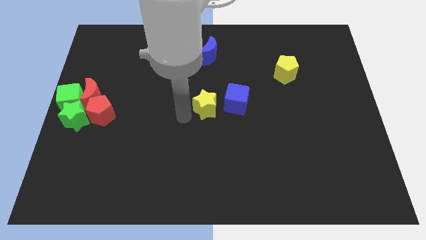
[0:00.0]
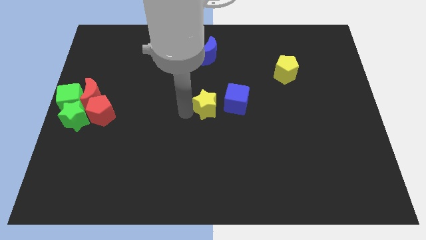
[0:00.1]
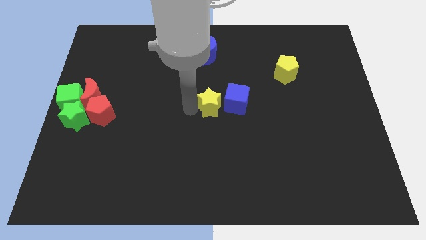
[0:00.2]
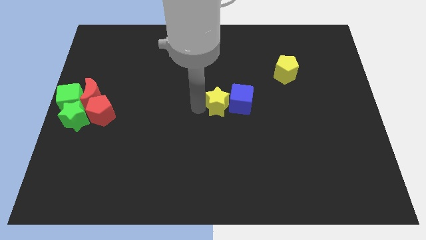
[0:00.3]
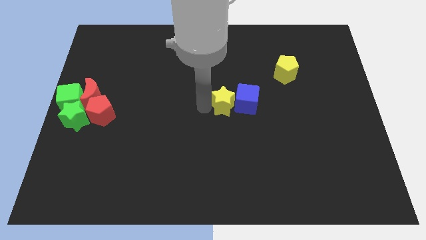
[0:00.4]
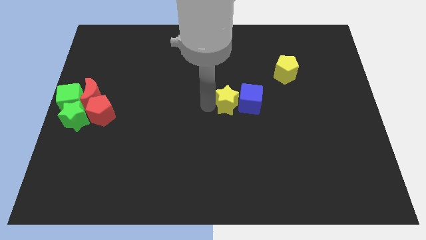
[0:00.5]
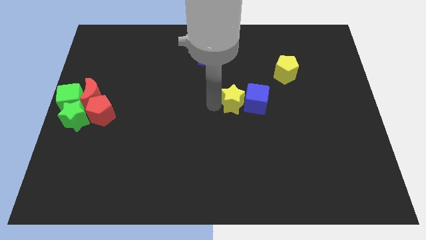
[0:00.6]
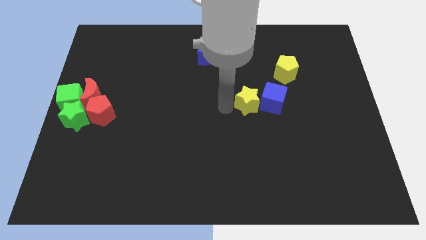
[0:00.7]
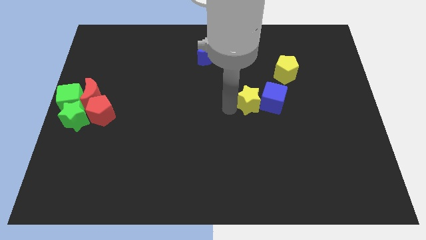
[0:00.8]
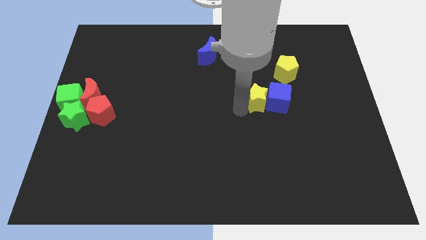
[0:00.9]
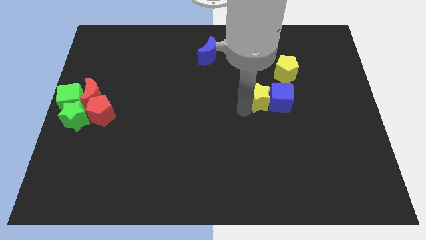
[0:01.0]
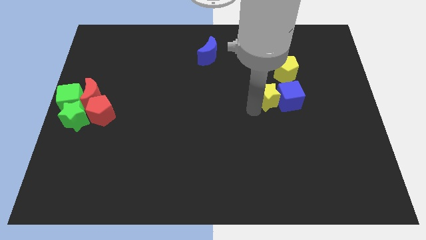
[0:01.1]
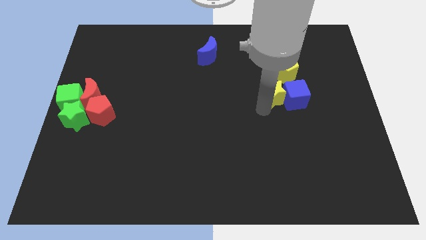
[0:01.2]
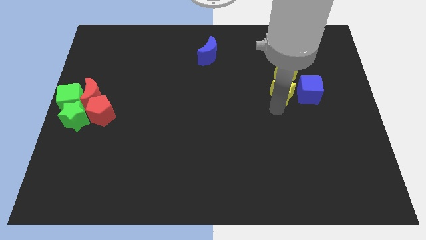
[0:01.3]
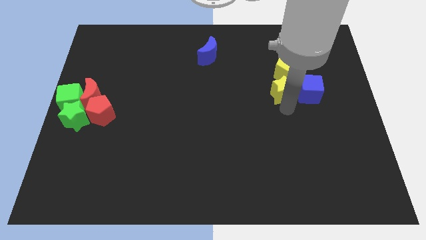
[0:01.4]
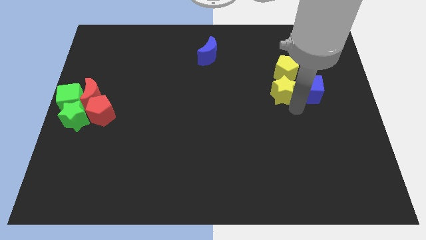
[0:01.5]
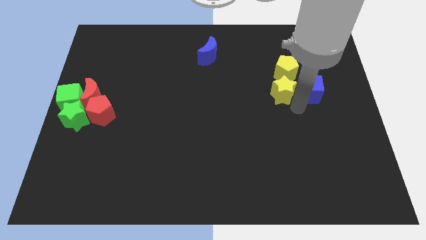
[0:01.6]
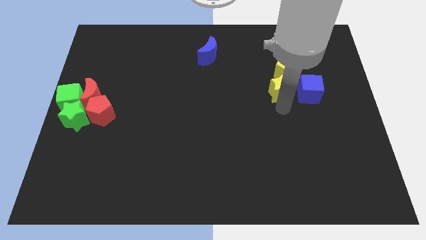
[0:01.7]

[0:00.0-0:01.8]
place yellow star to the bottom of yellow pentagon

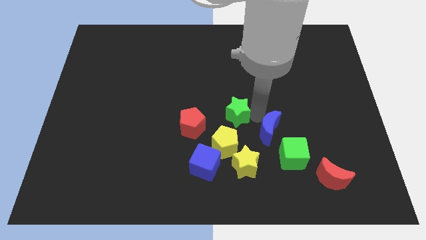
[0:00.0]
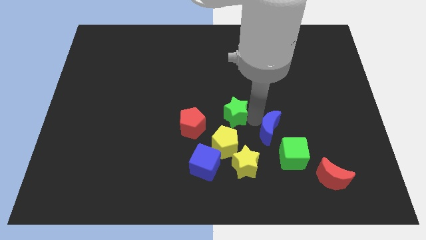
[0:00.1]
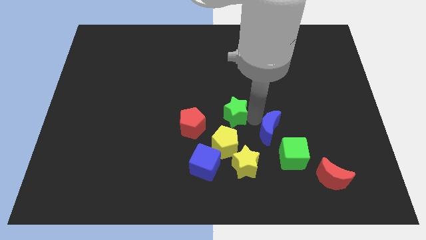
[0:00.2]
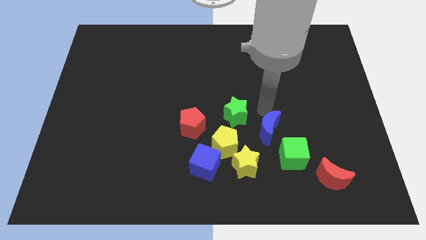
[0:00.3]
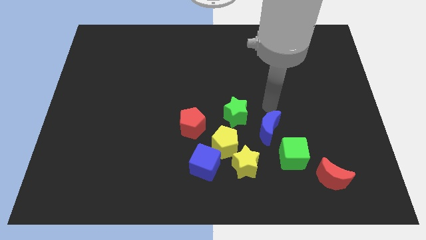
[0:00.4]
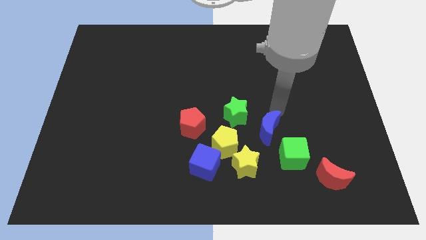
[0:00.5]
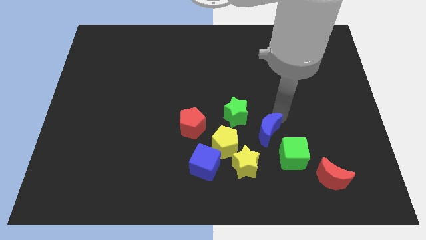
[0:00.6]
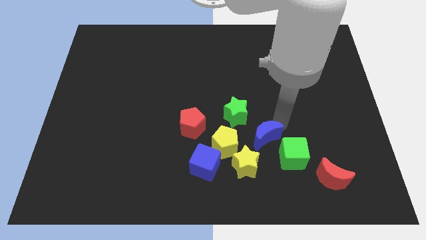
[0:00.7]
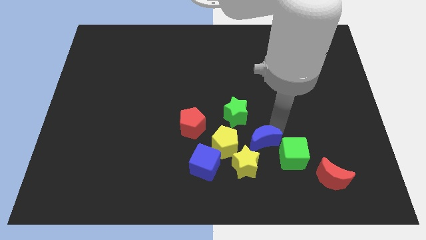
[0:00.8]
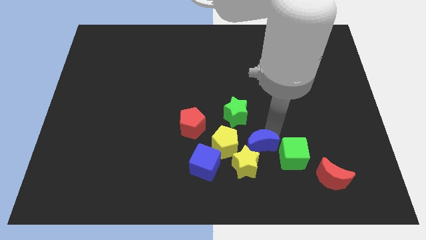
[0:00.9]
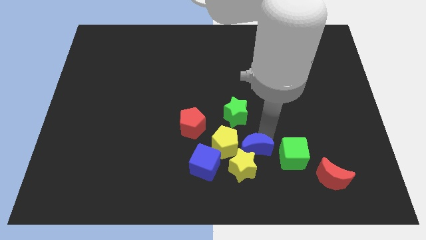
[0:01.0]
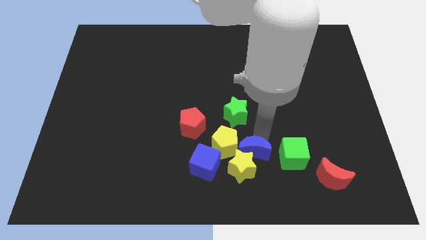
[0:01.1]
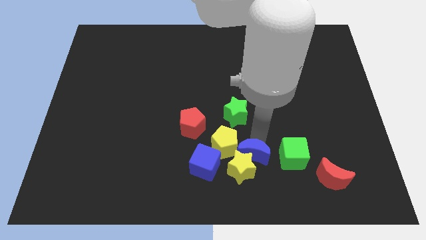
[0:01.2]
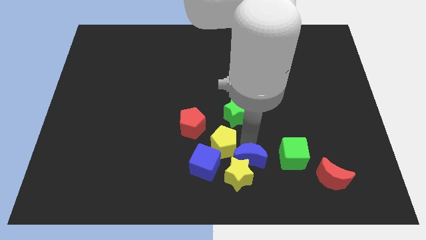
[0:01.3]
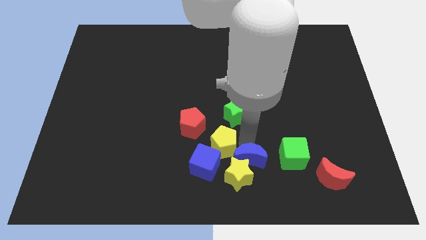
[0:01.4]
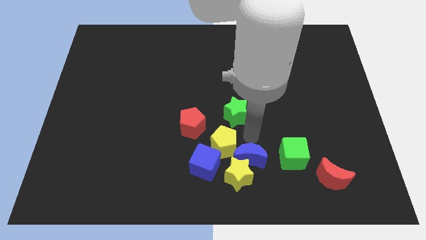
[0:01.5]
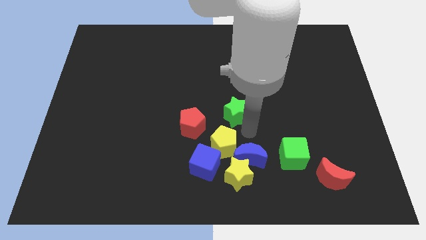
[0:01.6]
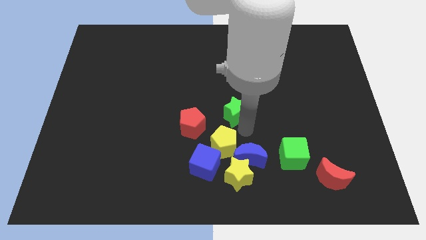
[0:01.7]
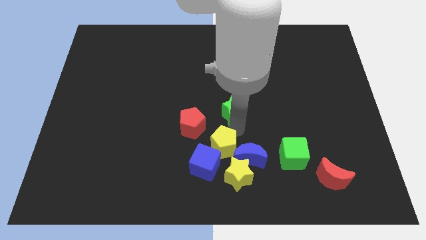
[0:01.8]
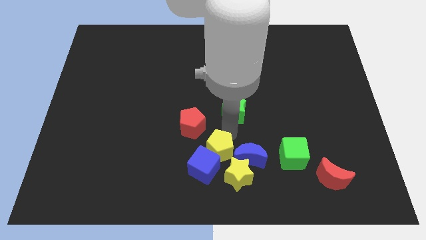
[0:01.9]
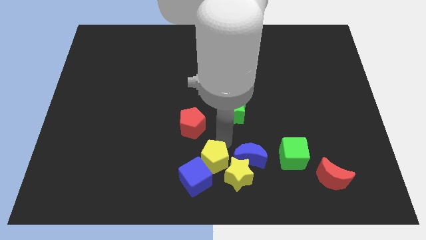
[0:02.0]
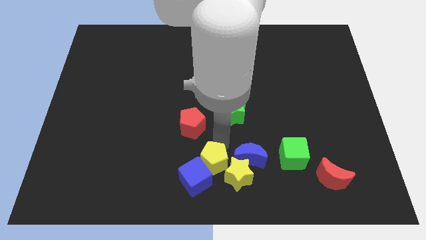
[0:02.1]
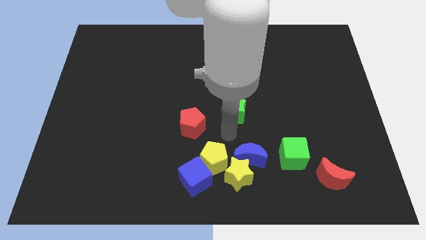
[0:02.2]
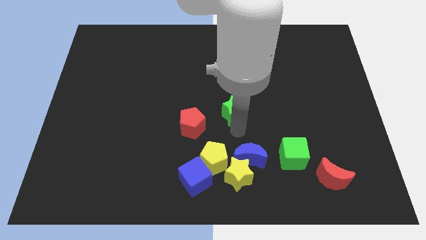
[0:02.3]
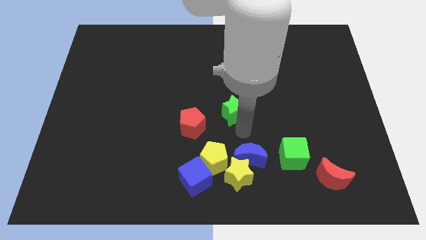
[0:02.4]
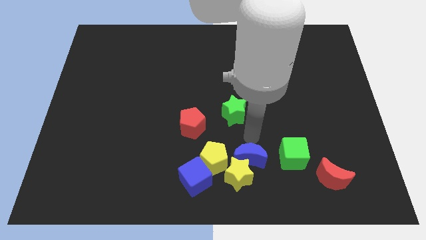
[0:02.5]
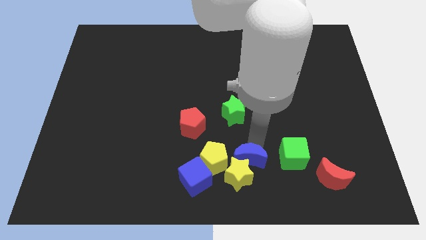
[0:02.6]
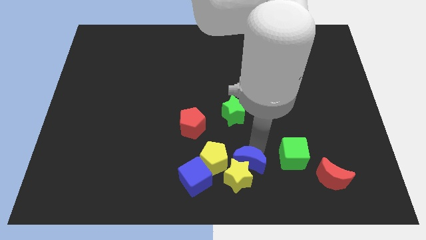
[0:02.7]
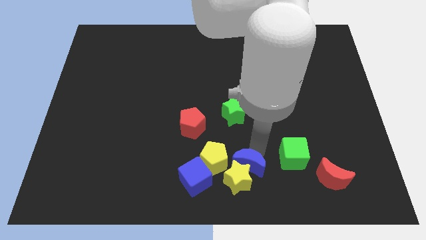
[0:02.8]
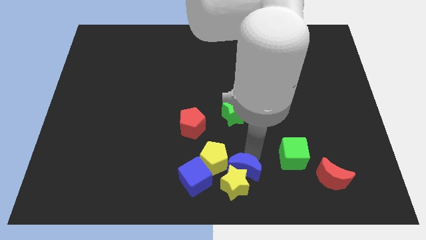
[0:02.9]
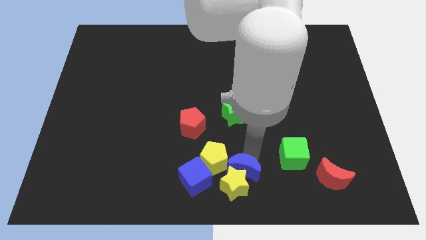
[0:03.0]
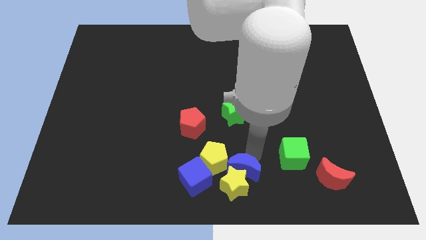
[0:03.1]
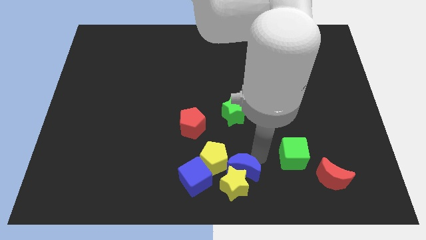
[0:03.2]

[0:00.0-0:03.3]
push blue blocks and yellow blocks towards bottom center

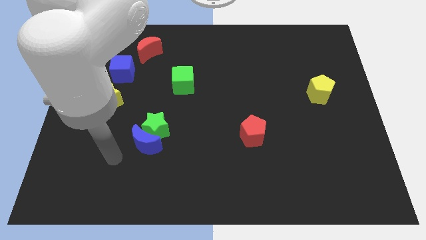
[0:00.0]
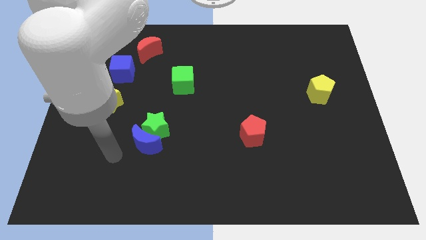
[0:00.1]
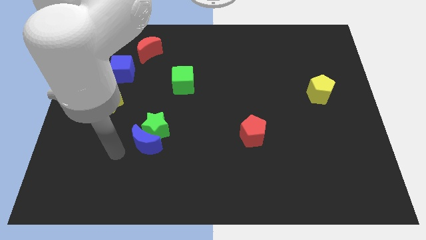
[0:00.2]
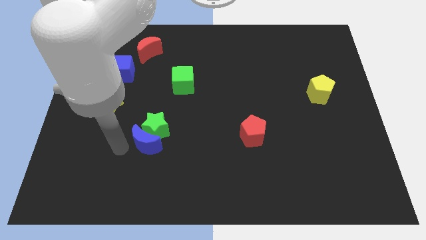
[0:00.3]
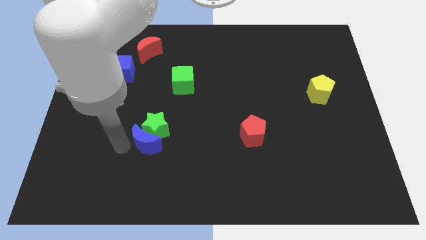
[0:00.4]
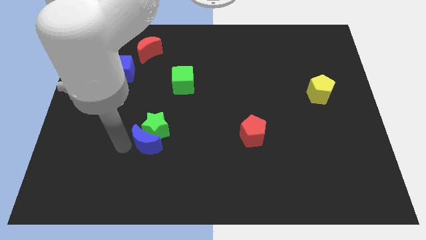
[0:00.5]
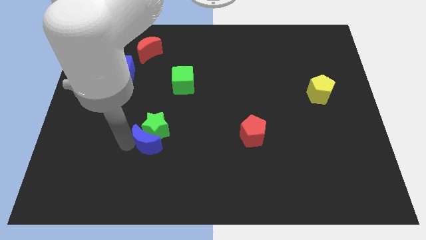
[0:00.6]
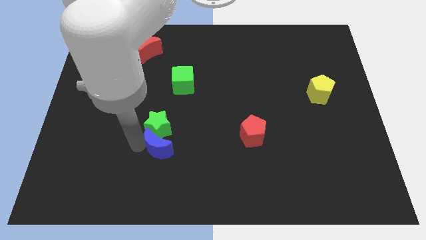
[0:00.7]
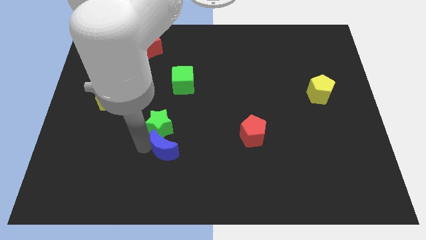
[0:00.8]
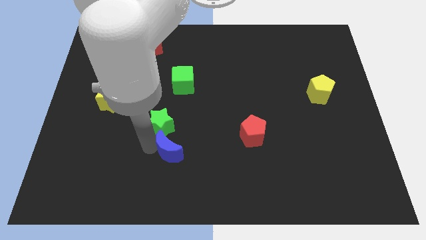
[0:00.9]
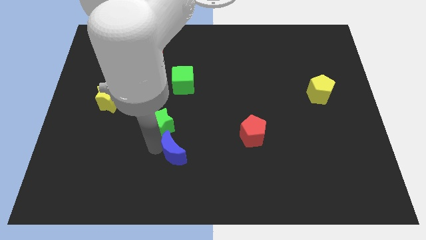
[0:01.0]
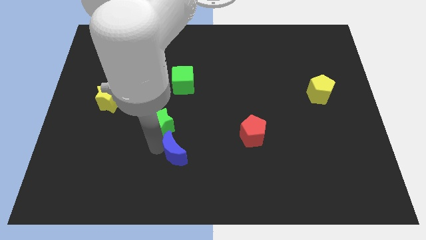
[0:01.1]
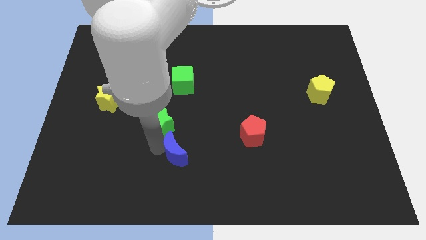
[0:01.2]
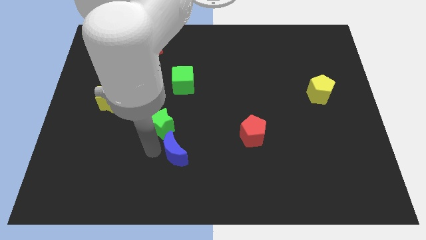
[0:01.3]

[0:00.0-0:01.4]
separate blue crescent from green star

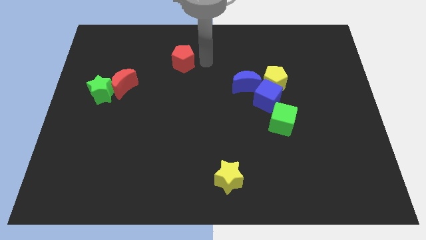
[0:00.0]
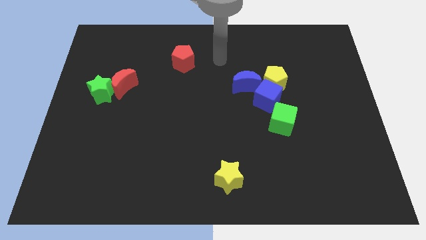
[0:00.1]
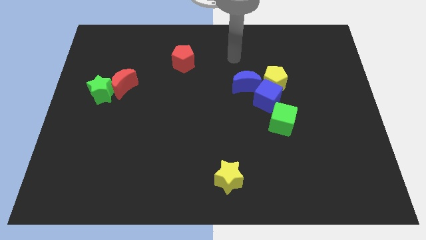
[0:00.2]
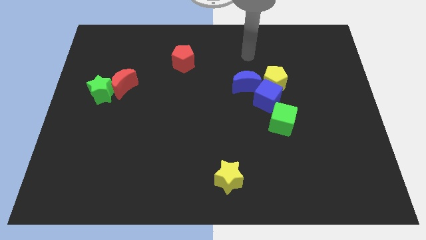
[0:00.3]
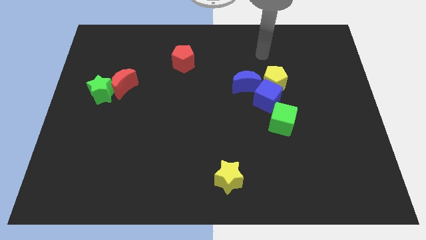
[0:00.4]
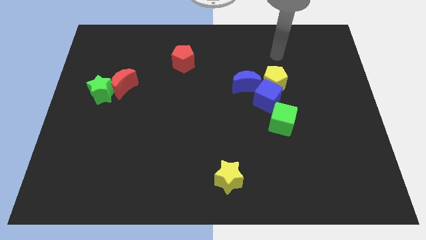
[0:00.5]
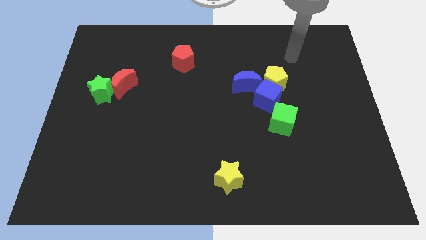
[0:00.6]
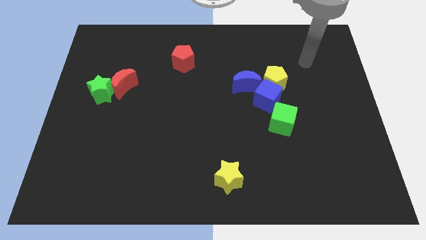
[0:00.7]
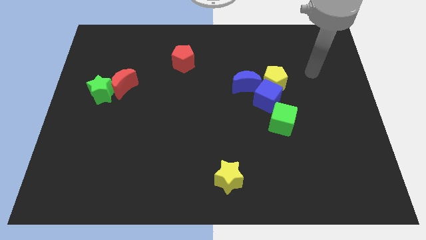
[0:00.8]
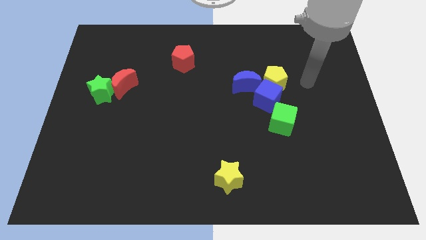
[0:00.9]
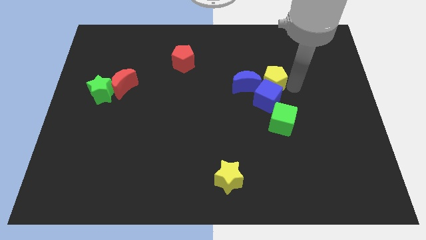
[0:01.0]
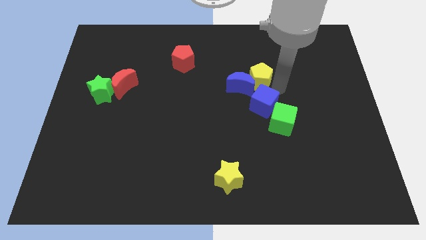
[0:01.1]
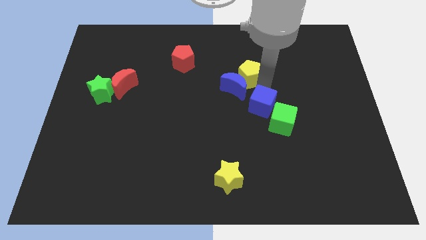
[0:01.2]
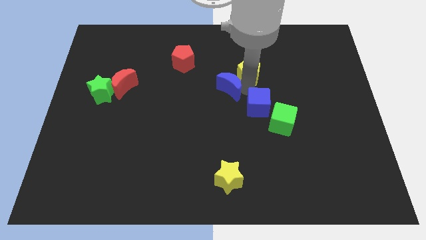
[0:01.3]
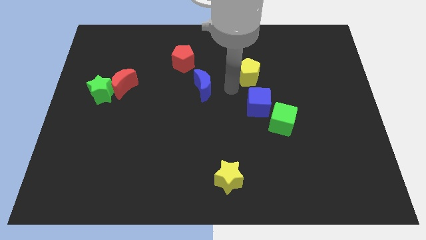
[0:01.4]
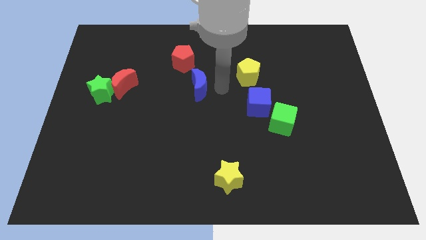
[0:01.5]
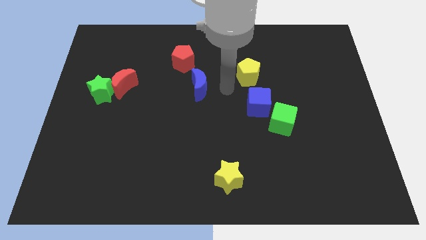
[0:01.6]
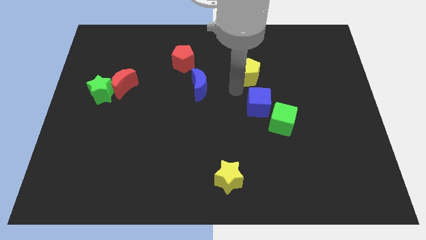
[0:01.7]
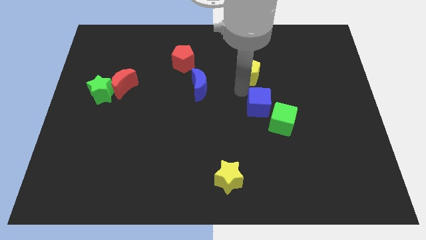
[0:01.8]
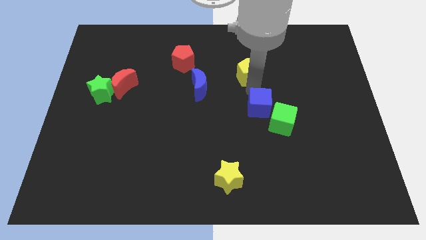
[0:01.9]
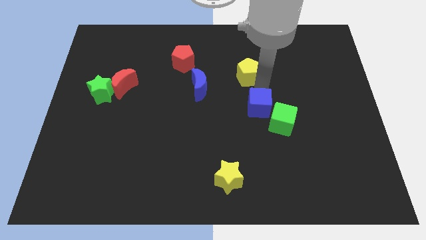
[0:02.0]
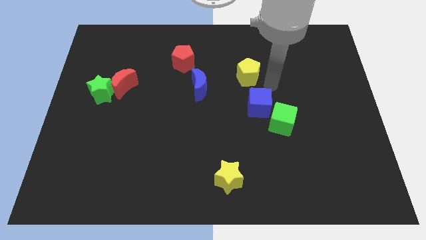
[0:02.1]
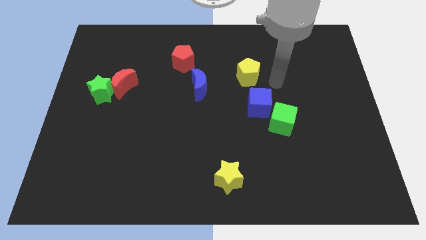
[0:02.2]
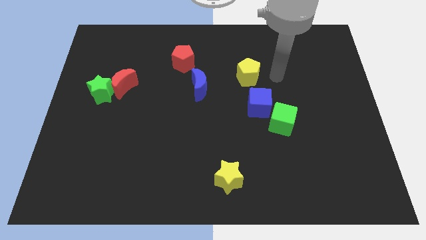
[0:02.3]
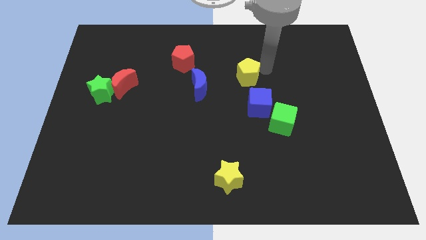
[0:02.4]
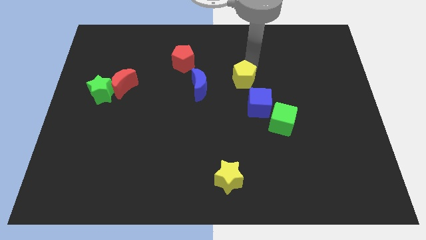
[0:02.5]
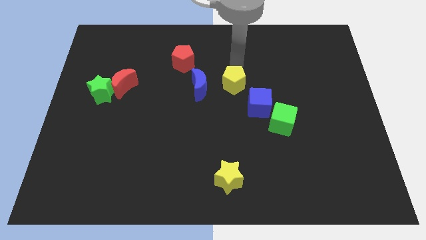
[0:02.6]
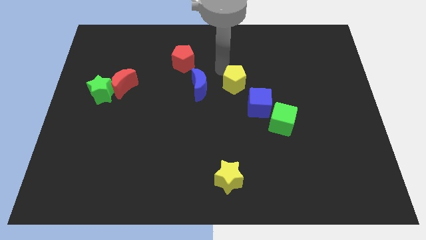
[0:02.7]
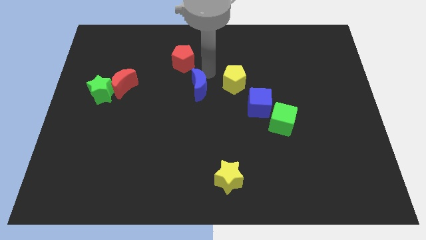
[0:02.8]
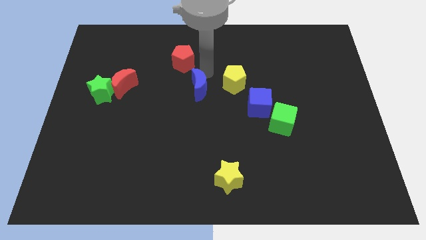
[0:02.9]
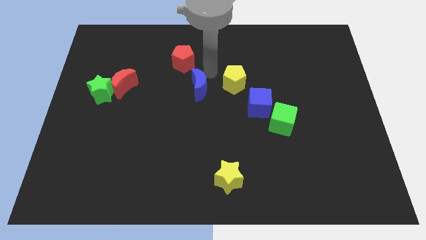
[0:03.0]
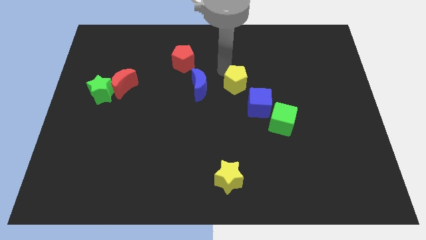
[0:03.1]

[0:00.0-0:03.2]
separate the blue moon and yellow pentagon from the blue cube
